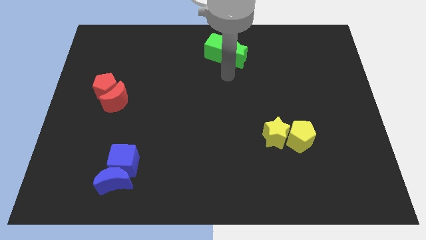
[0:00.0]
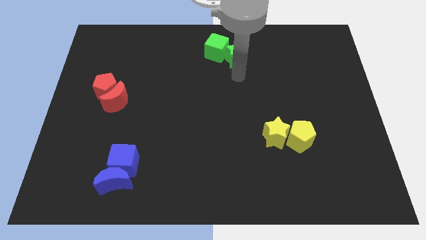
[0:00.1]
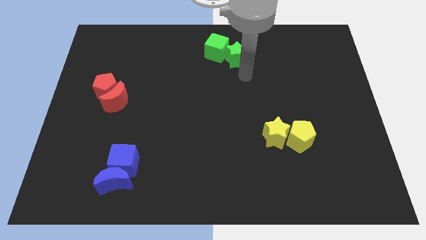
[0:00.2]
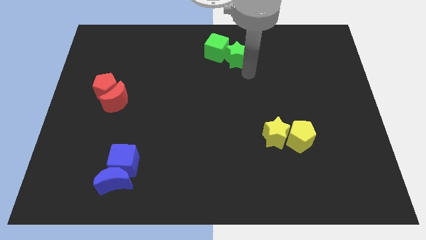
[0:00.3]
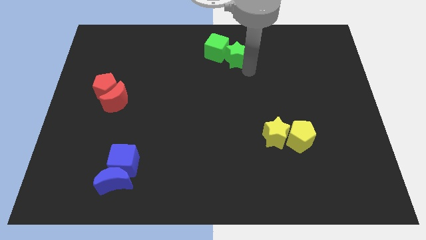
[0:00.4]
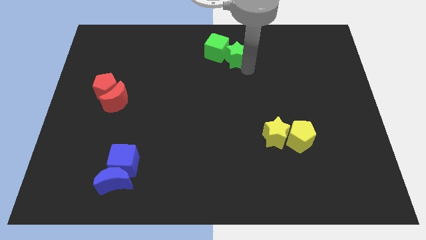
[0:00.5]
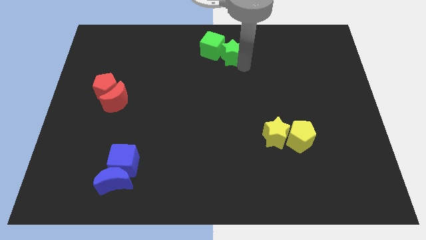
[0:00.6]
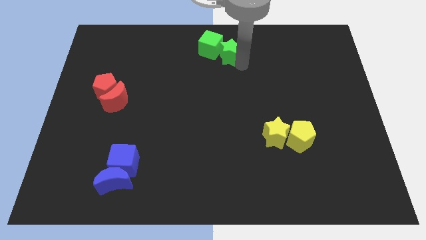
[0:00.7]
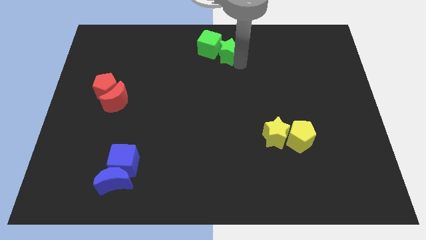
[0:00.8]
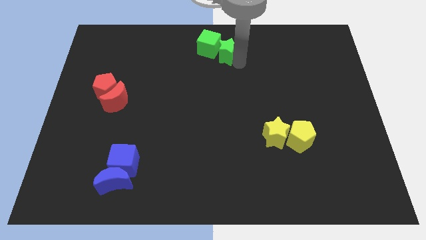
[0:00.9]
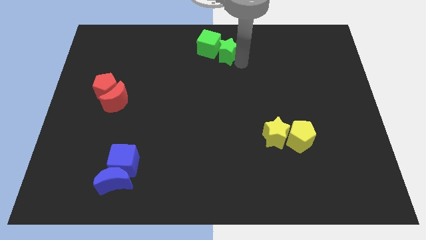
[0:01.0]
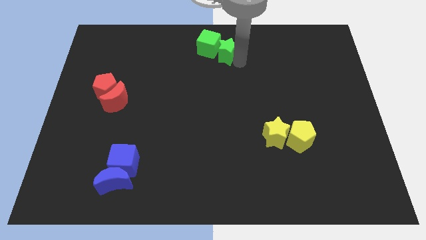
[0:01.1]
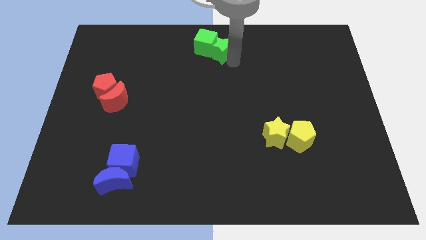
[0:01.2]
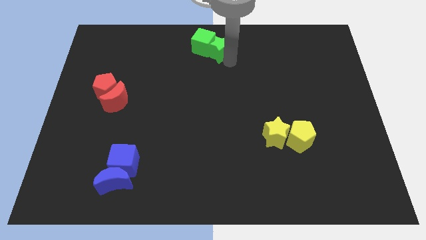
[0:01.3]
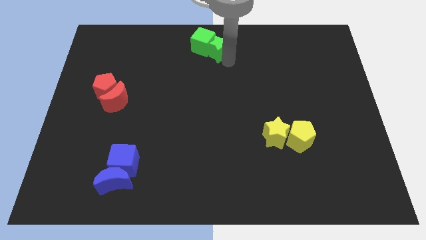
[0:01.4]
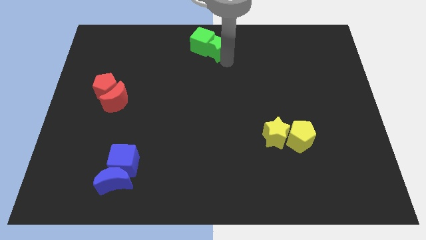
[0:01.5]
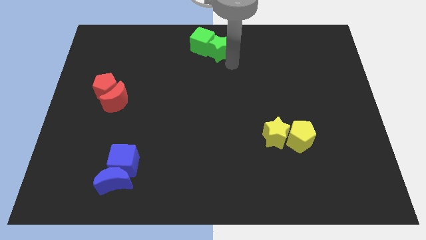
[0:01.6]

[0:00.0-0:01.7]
place green cube and green star center upside of the board

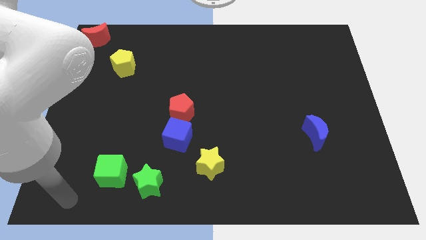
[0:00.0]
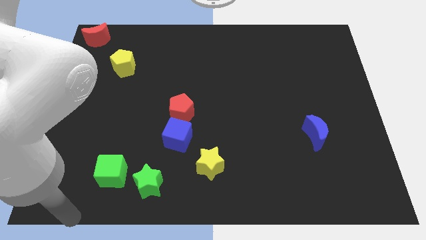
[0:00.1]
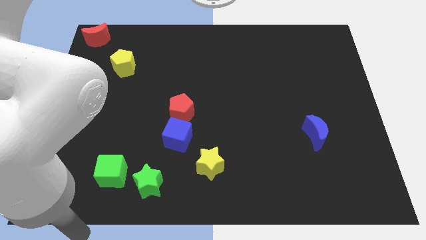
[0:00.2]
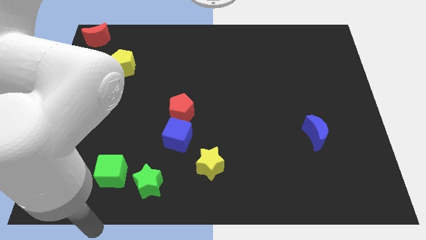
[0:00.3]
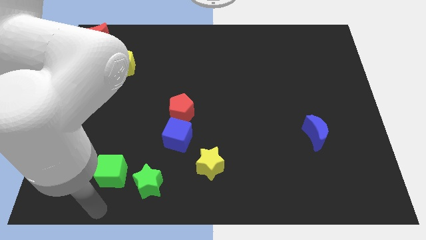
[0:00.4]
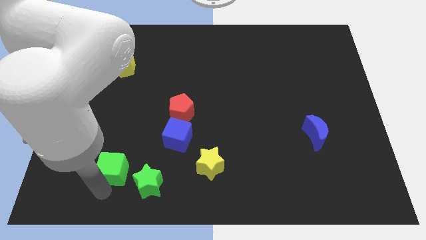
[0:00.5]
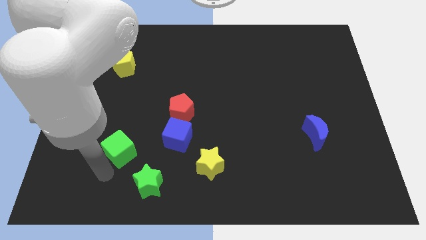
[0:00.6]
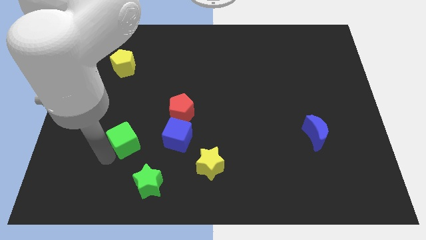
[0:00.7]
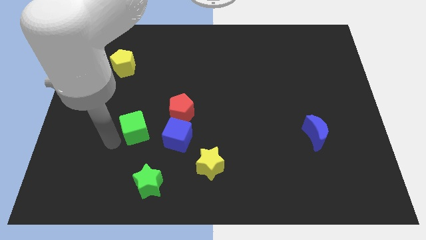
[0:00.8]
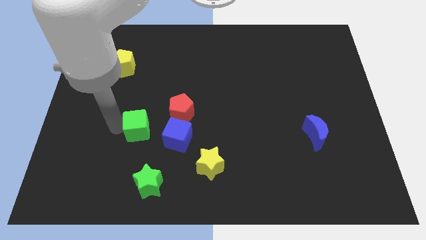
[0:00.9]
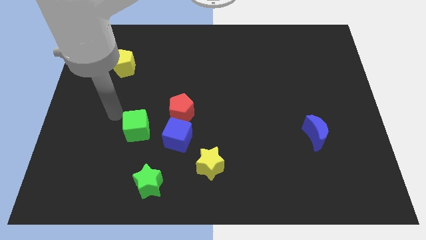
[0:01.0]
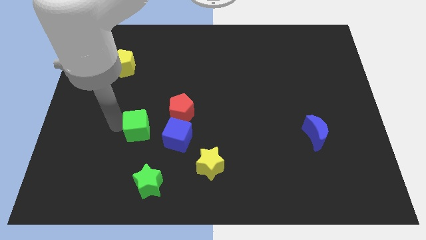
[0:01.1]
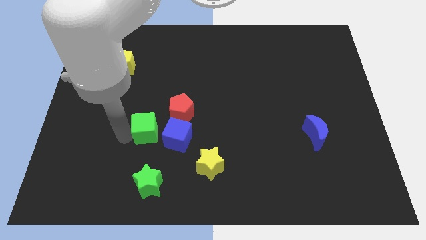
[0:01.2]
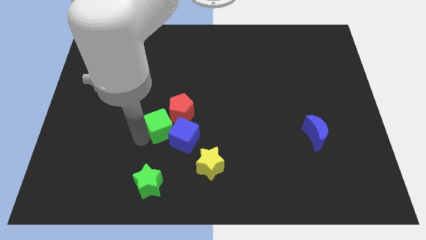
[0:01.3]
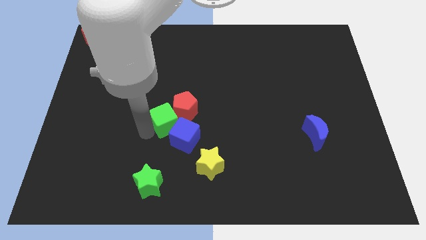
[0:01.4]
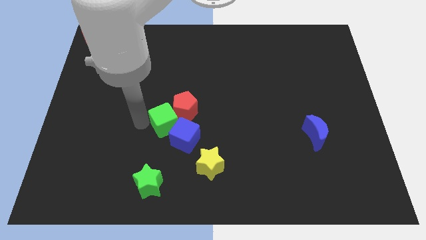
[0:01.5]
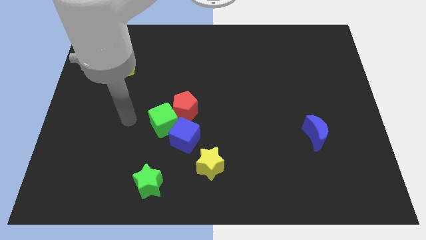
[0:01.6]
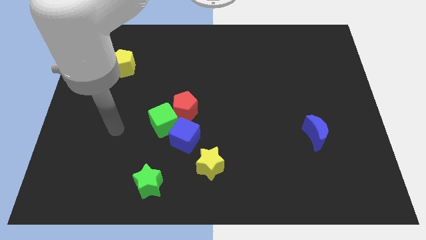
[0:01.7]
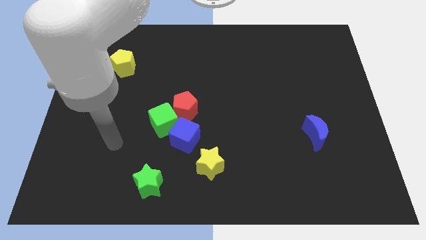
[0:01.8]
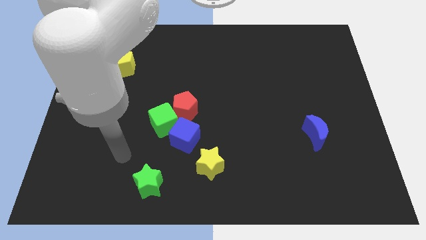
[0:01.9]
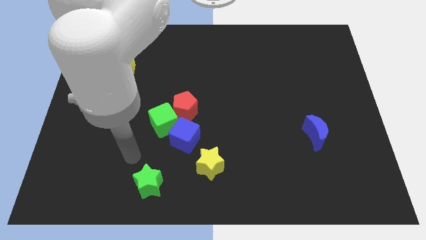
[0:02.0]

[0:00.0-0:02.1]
place green cube into red pentagon

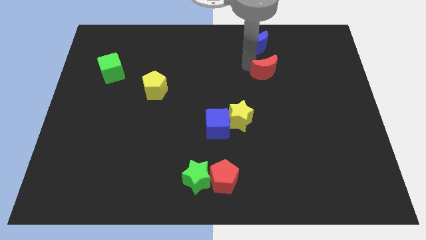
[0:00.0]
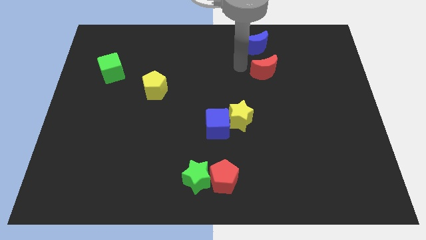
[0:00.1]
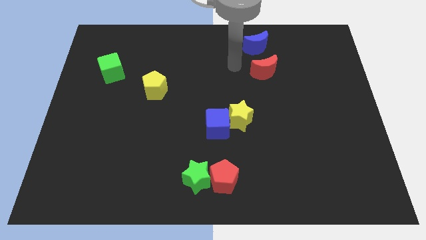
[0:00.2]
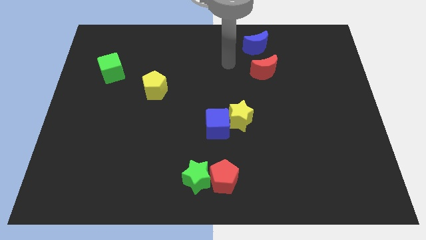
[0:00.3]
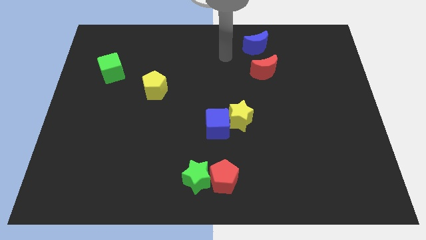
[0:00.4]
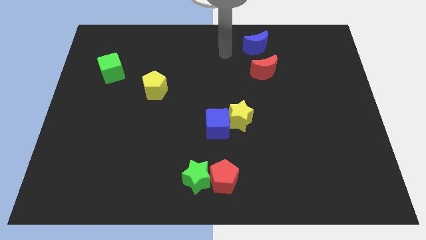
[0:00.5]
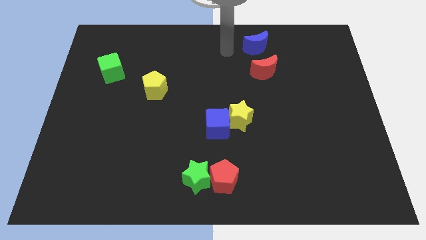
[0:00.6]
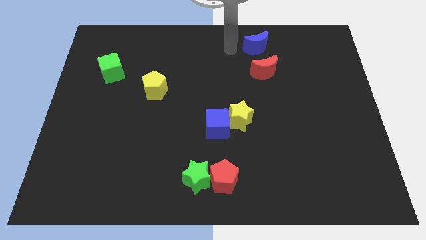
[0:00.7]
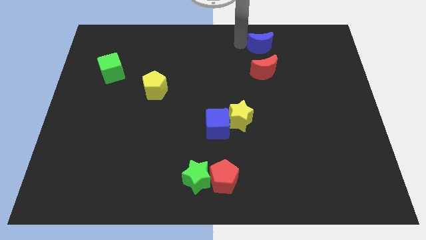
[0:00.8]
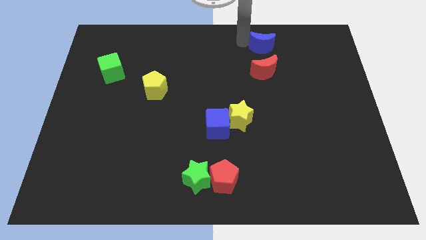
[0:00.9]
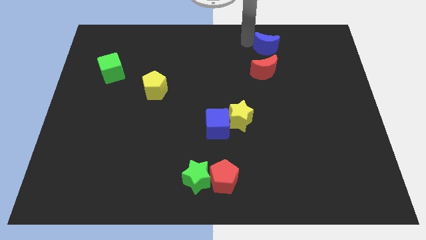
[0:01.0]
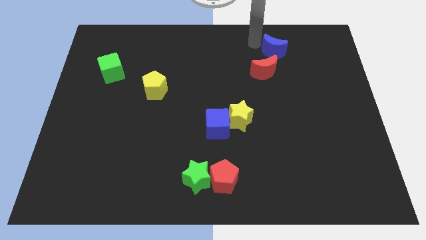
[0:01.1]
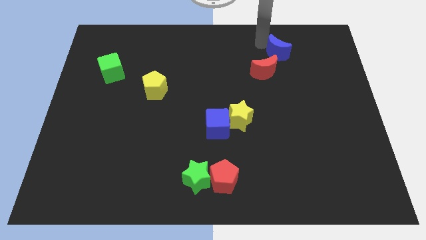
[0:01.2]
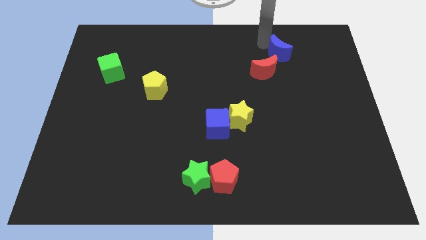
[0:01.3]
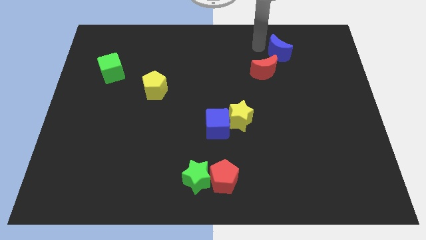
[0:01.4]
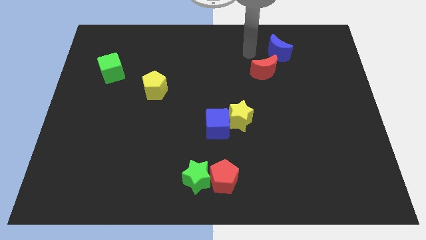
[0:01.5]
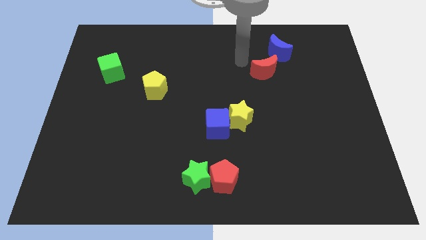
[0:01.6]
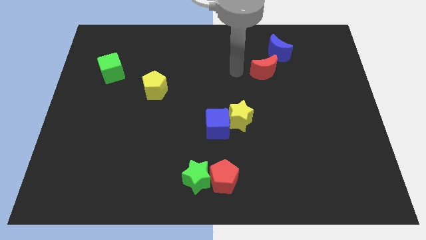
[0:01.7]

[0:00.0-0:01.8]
put the blue moon at the top right of the red moon

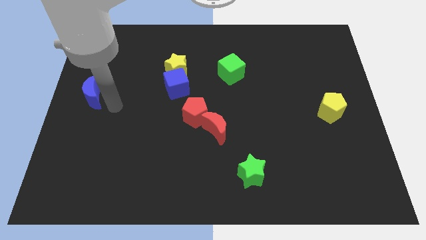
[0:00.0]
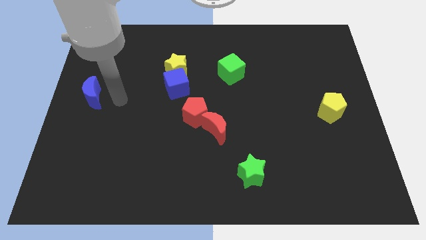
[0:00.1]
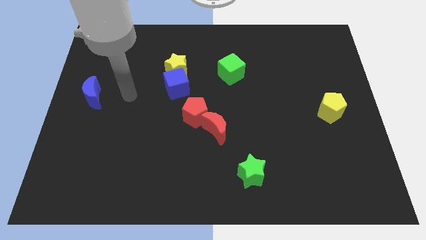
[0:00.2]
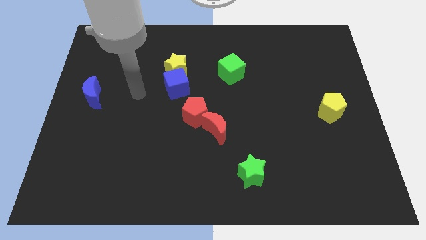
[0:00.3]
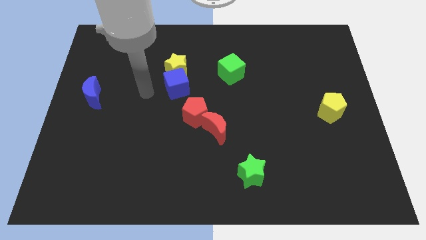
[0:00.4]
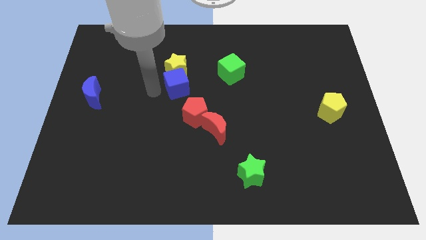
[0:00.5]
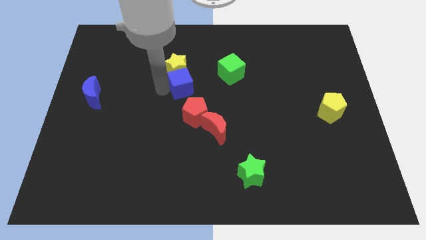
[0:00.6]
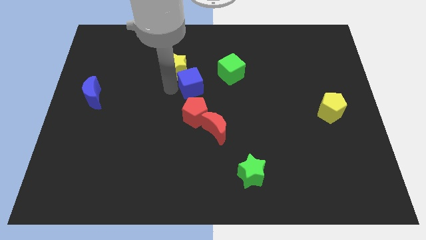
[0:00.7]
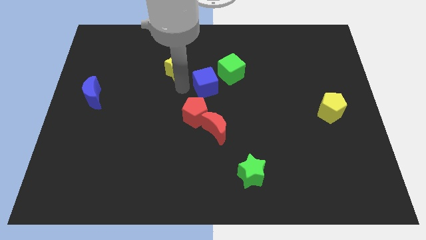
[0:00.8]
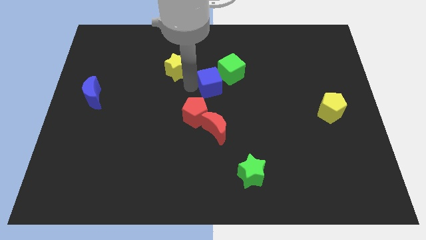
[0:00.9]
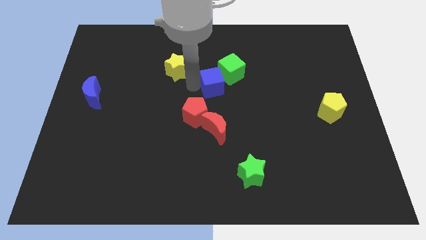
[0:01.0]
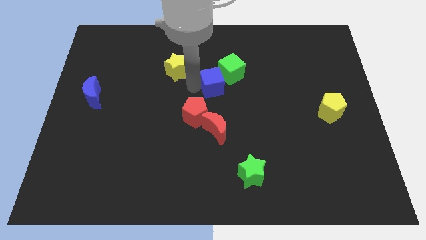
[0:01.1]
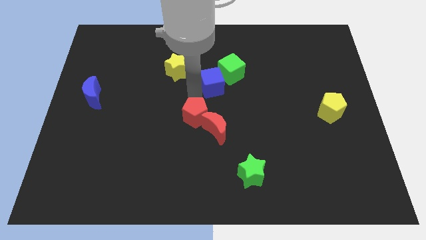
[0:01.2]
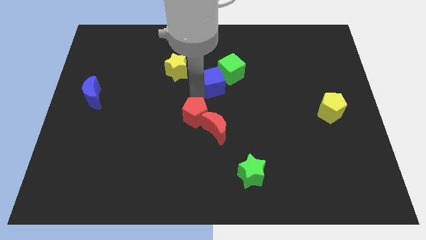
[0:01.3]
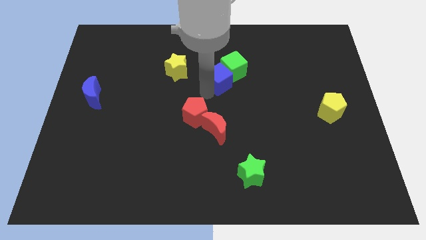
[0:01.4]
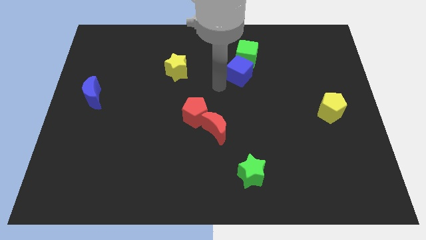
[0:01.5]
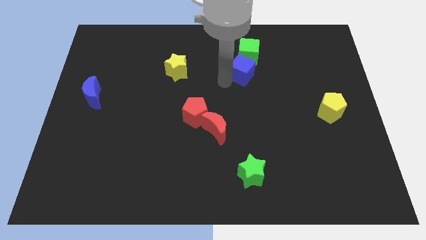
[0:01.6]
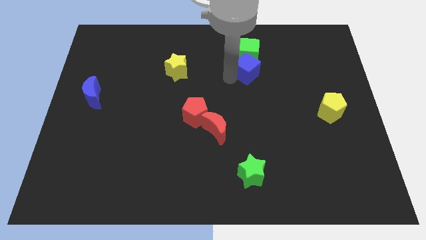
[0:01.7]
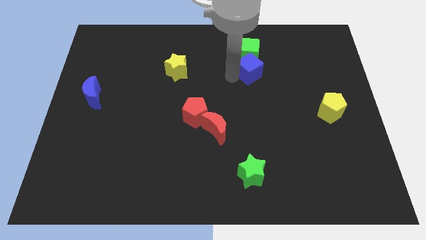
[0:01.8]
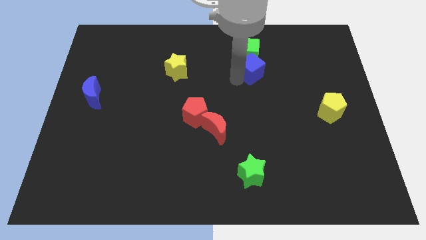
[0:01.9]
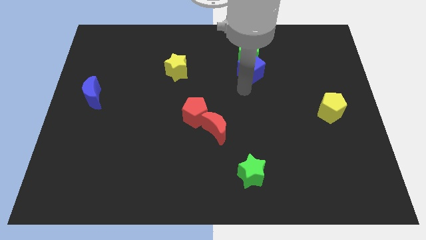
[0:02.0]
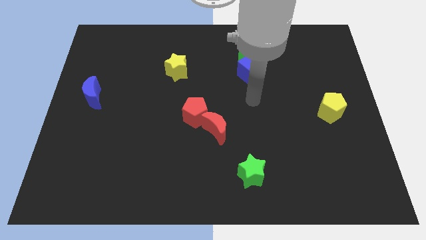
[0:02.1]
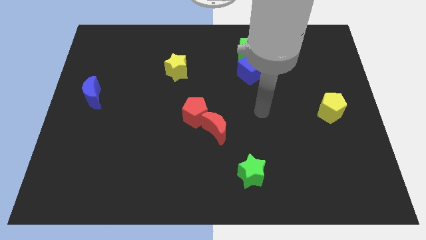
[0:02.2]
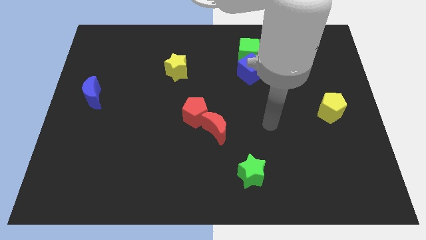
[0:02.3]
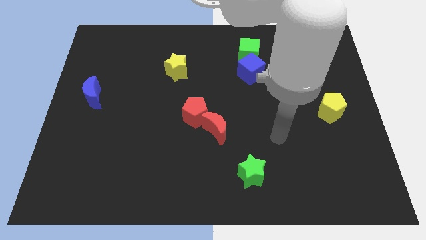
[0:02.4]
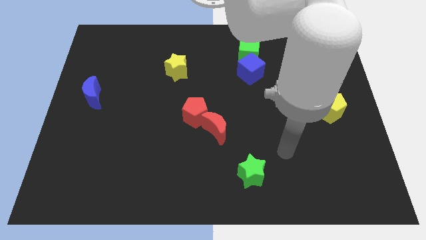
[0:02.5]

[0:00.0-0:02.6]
push the blue cube to the bottom of the green cube

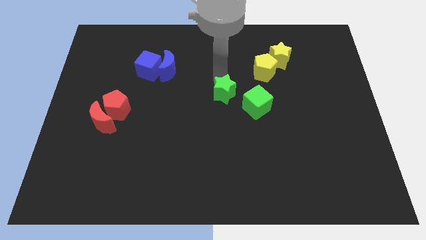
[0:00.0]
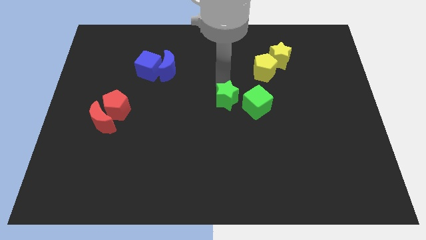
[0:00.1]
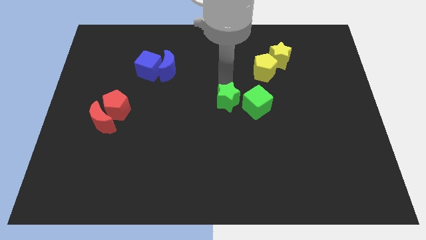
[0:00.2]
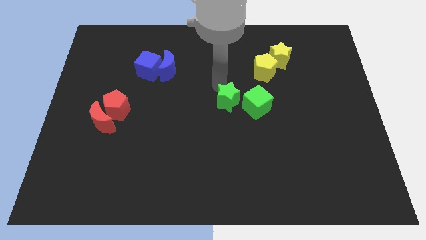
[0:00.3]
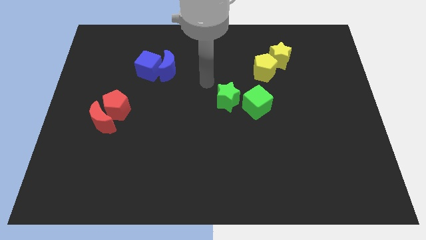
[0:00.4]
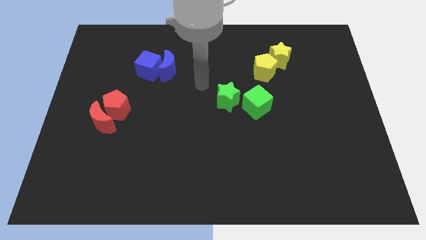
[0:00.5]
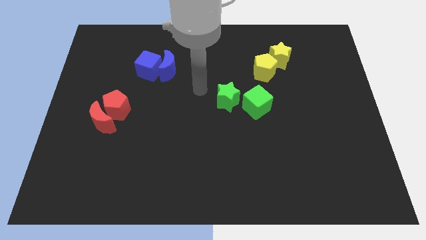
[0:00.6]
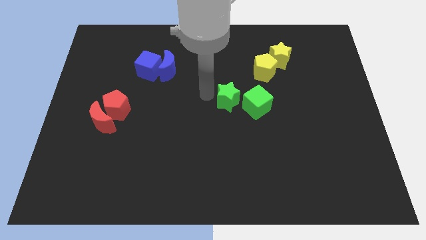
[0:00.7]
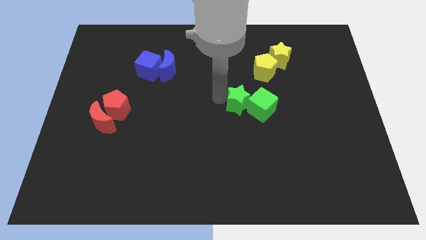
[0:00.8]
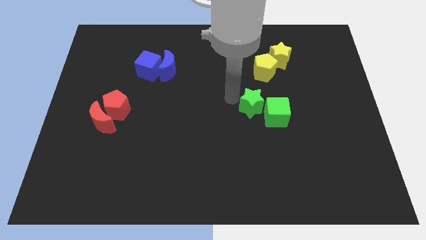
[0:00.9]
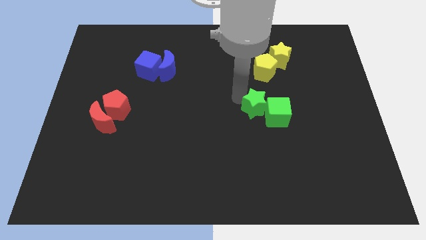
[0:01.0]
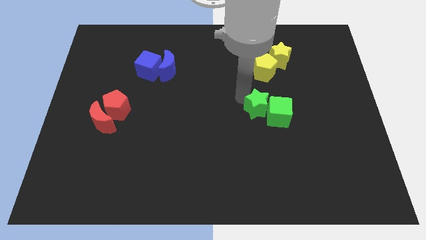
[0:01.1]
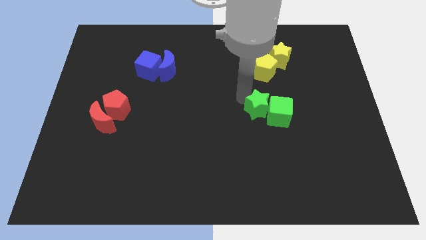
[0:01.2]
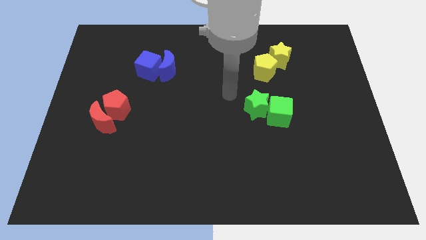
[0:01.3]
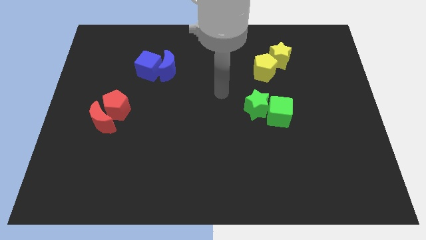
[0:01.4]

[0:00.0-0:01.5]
push green star into green cube
